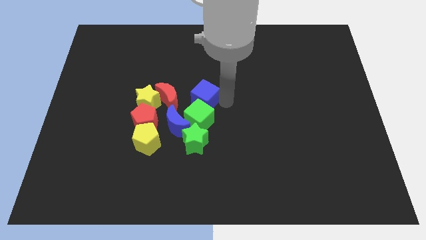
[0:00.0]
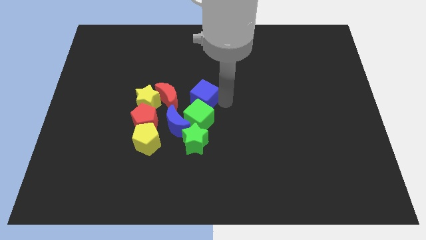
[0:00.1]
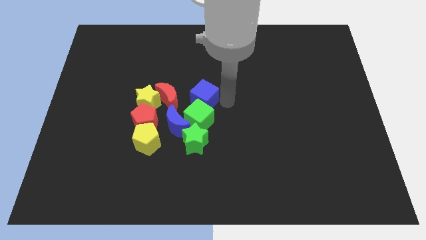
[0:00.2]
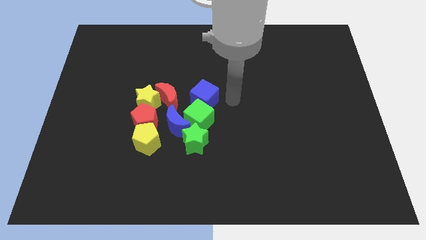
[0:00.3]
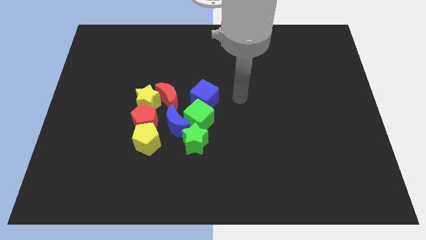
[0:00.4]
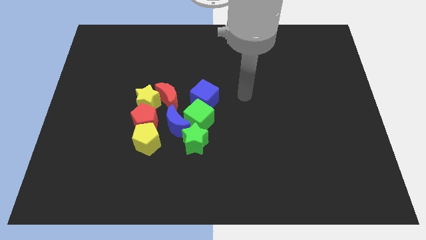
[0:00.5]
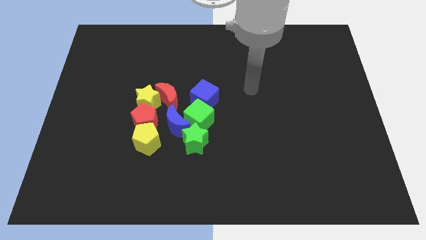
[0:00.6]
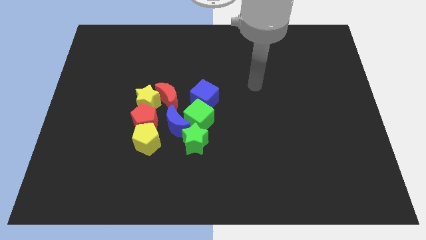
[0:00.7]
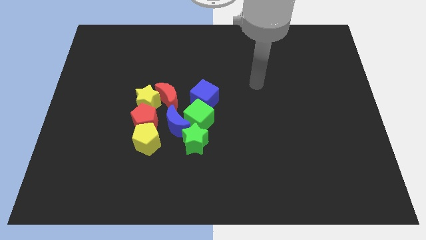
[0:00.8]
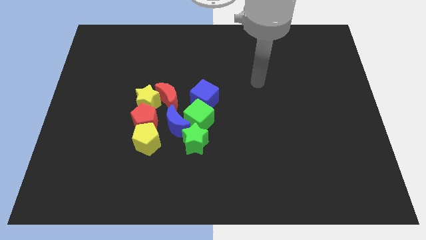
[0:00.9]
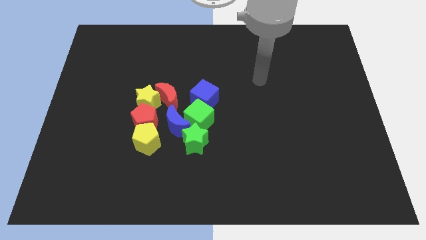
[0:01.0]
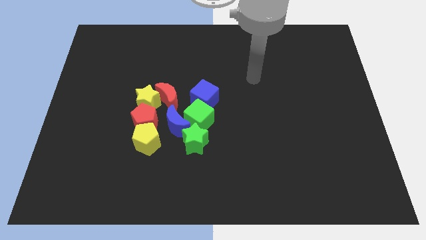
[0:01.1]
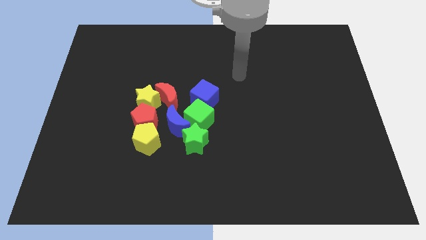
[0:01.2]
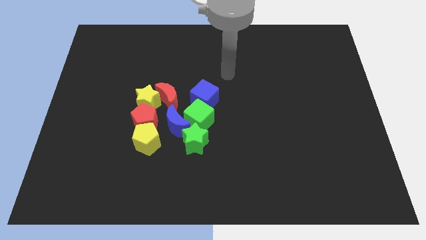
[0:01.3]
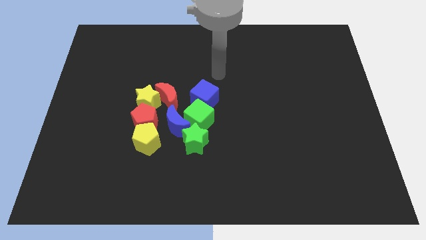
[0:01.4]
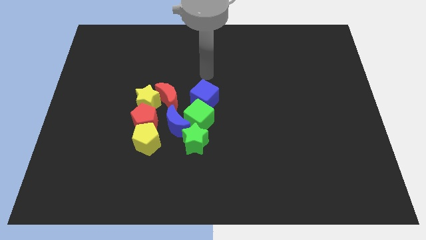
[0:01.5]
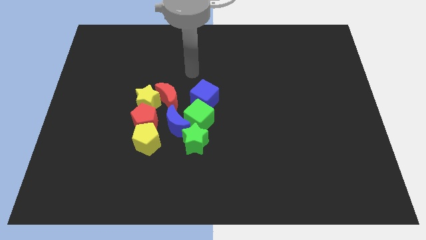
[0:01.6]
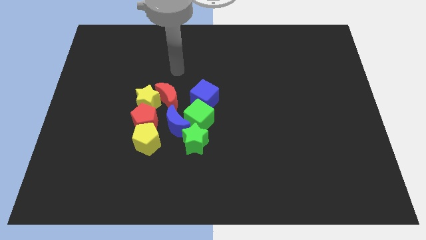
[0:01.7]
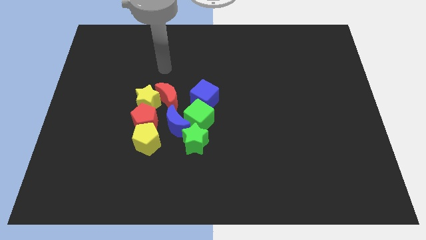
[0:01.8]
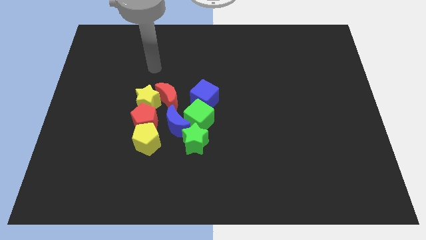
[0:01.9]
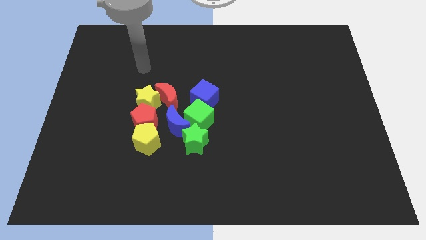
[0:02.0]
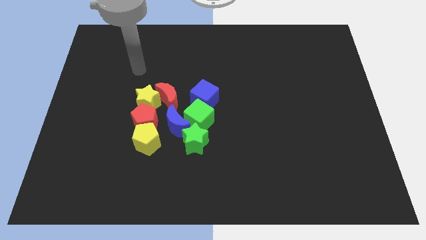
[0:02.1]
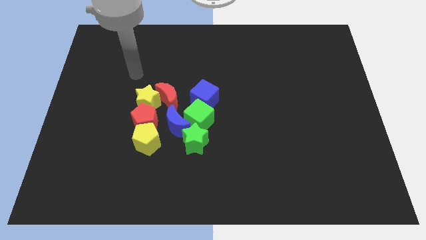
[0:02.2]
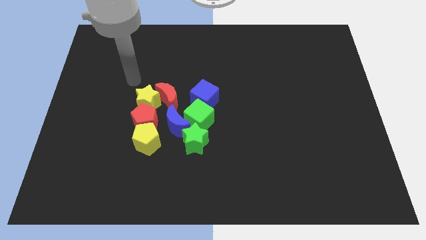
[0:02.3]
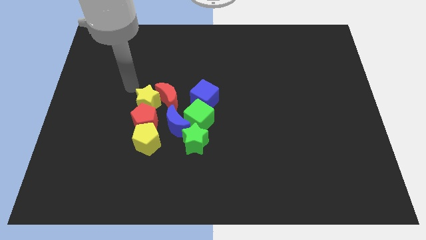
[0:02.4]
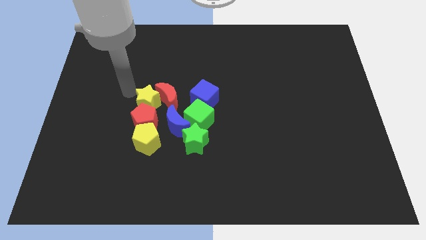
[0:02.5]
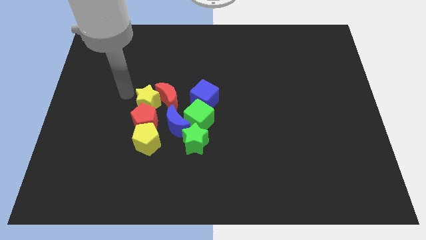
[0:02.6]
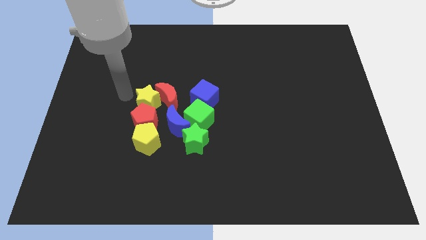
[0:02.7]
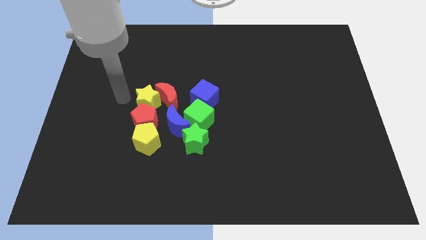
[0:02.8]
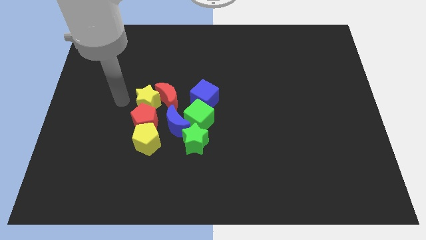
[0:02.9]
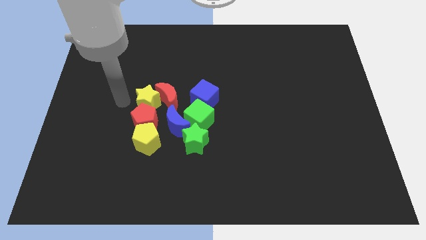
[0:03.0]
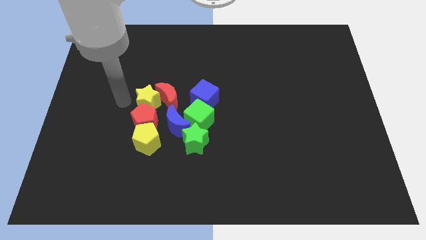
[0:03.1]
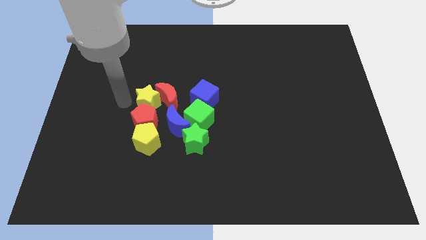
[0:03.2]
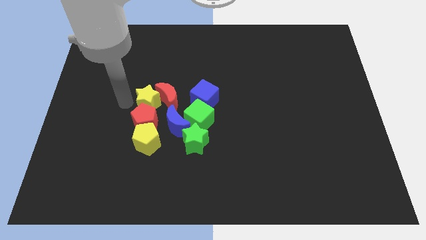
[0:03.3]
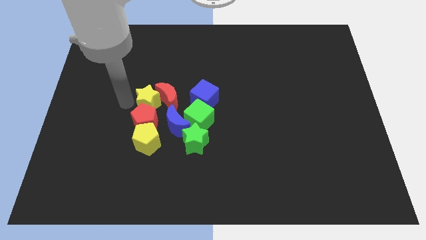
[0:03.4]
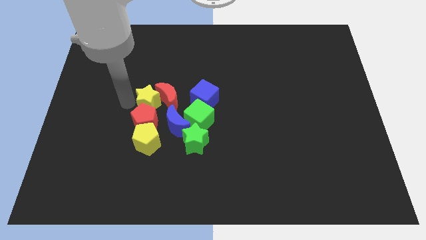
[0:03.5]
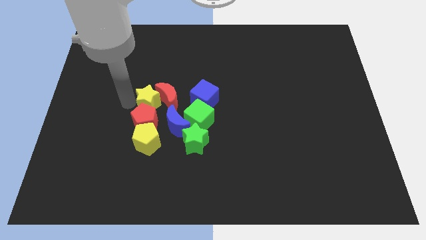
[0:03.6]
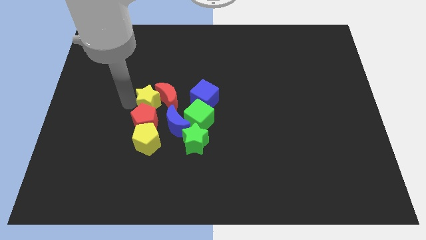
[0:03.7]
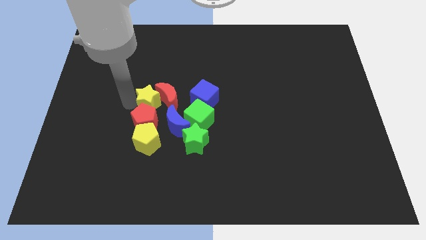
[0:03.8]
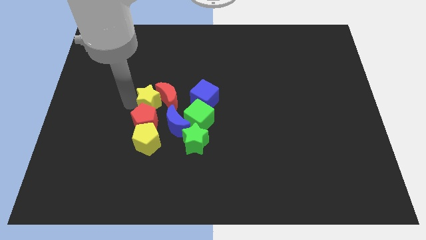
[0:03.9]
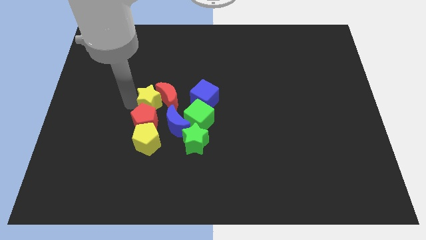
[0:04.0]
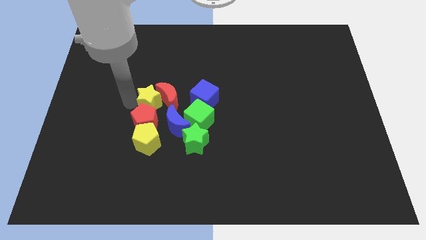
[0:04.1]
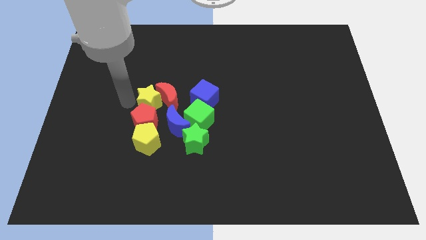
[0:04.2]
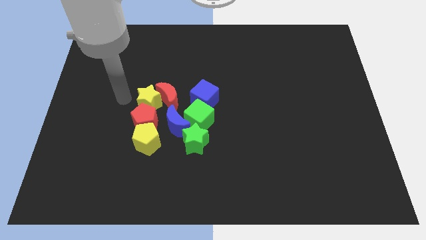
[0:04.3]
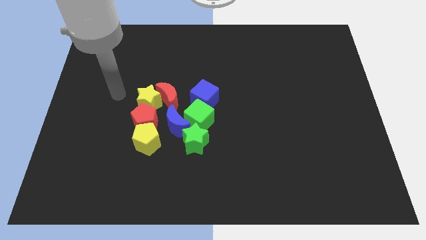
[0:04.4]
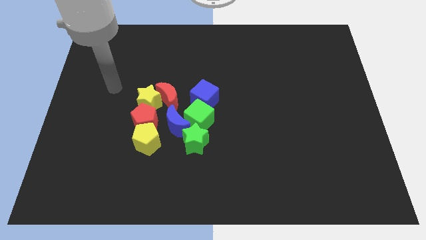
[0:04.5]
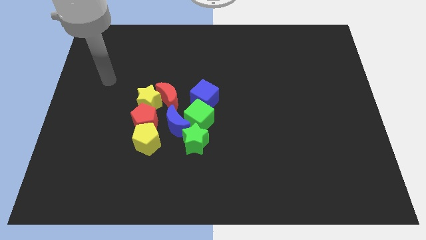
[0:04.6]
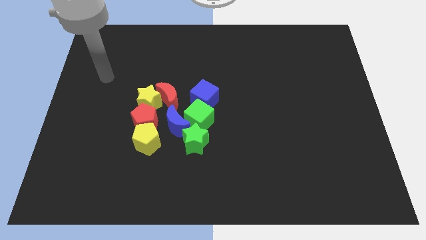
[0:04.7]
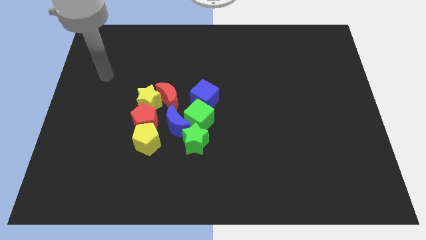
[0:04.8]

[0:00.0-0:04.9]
move the arm away from the blue cube

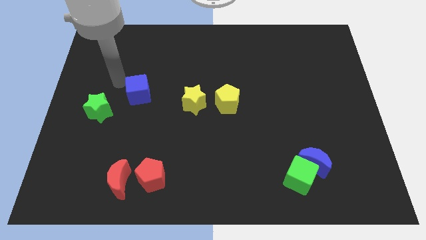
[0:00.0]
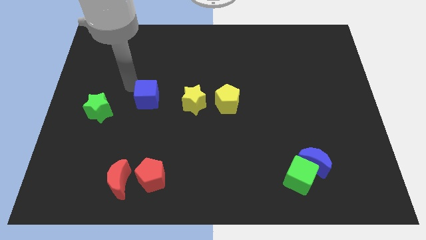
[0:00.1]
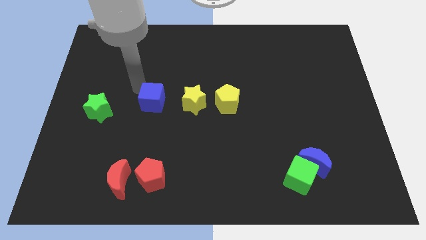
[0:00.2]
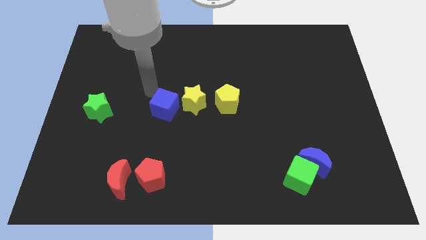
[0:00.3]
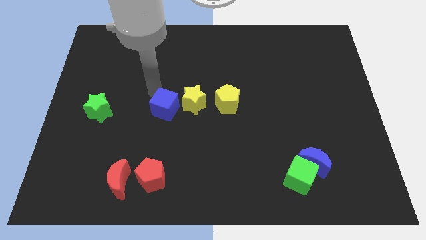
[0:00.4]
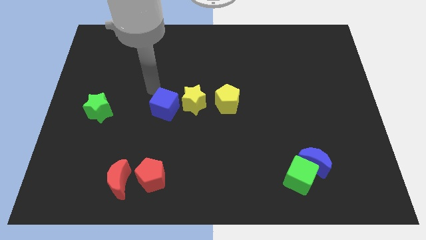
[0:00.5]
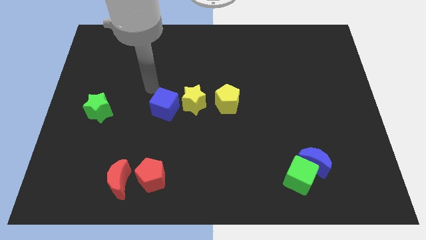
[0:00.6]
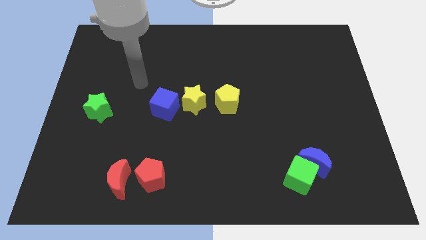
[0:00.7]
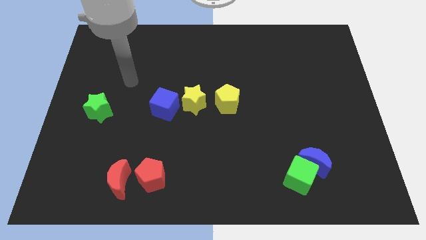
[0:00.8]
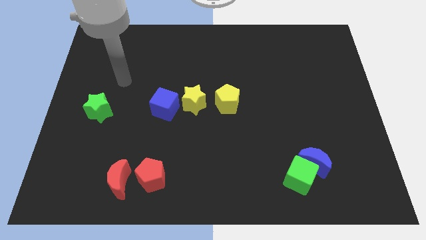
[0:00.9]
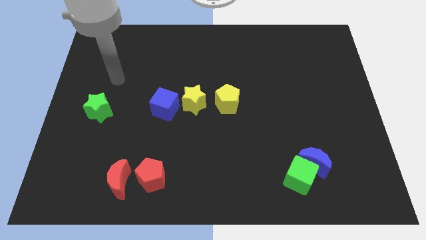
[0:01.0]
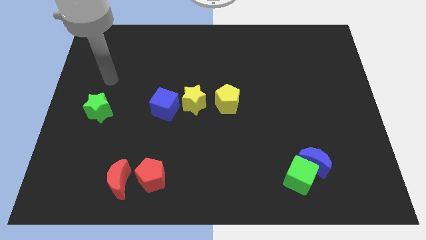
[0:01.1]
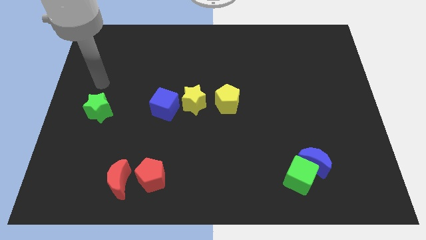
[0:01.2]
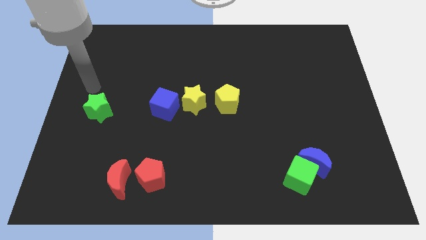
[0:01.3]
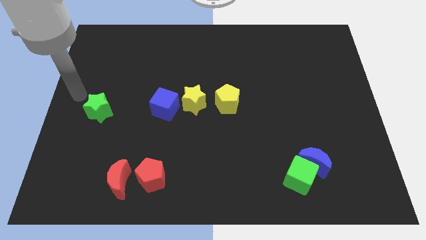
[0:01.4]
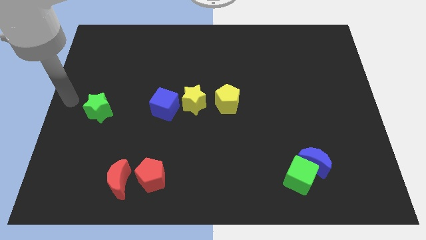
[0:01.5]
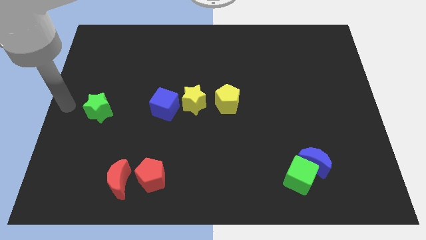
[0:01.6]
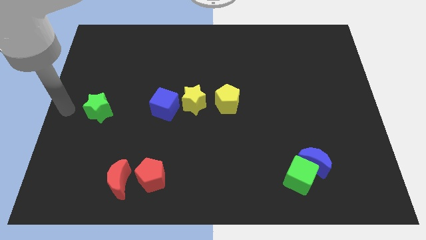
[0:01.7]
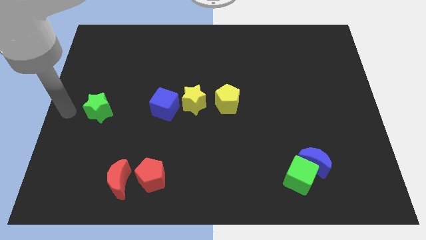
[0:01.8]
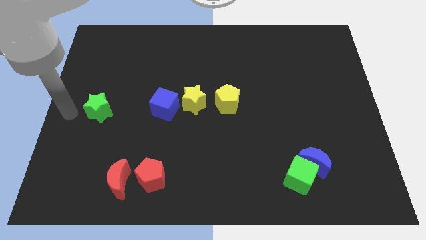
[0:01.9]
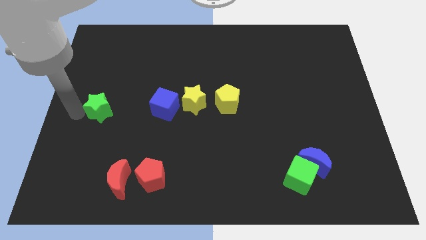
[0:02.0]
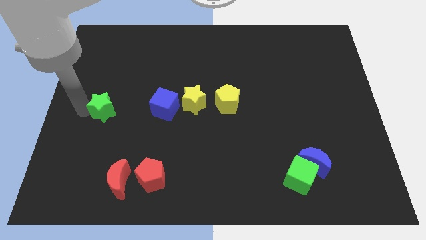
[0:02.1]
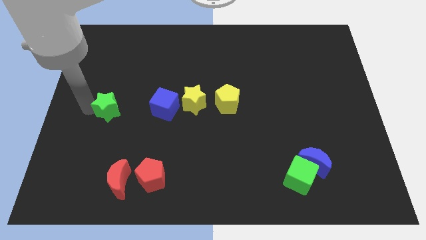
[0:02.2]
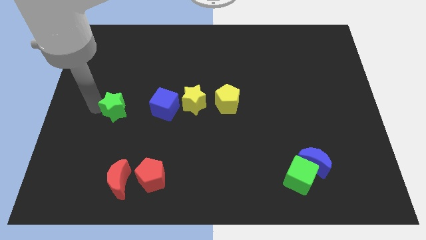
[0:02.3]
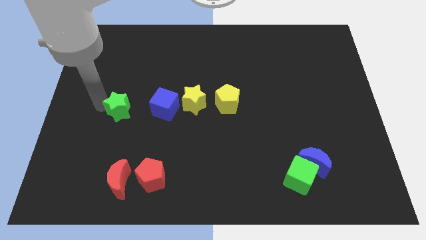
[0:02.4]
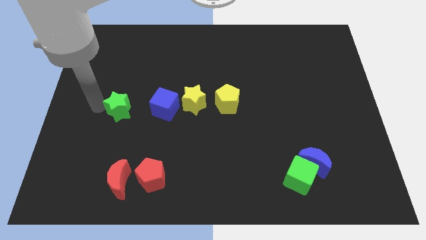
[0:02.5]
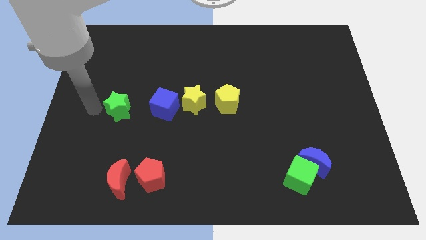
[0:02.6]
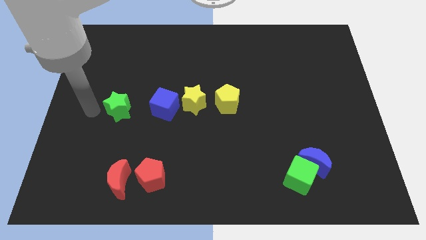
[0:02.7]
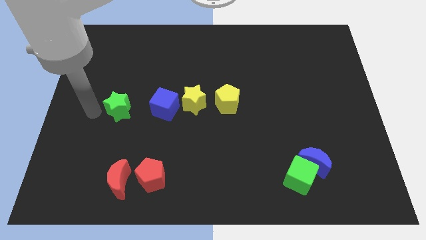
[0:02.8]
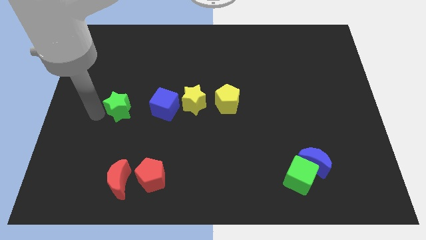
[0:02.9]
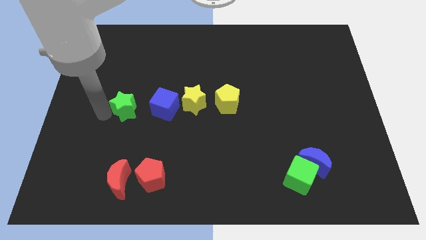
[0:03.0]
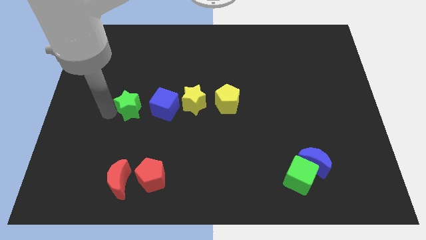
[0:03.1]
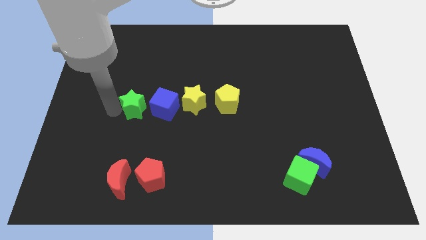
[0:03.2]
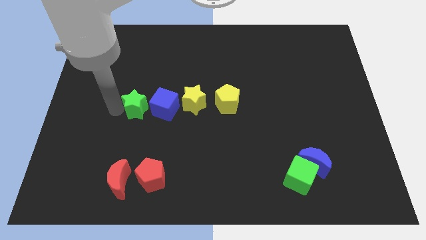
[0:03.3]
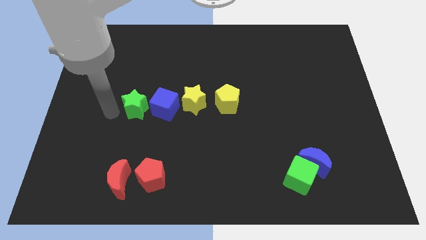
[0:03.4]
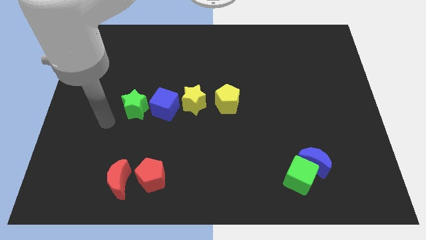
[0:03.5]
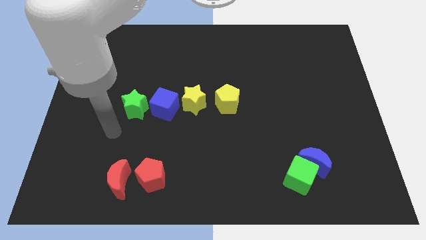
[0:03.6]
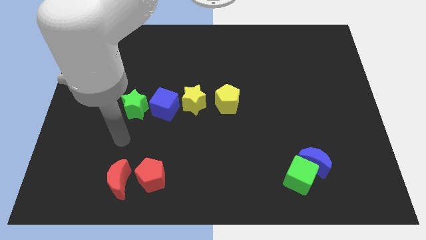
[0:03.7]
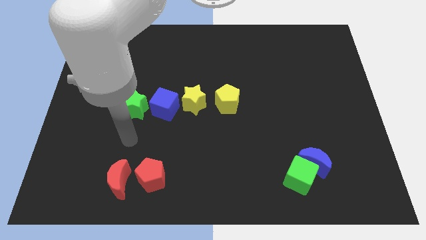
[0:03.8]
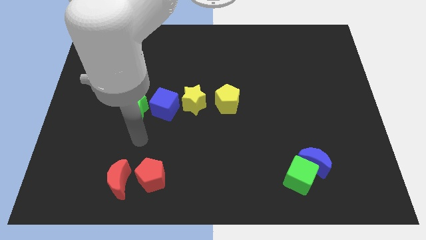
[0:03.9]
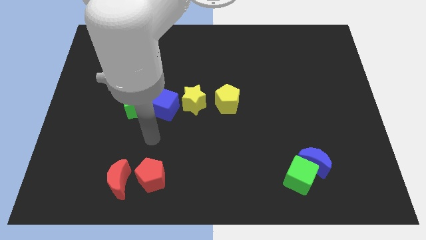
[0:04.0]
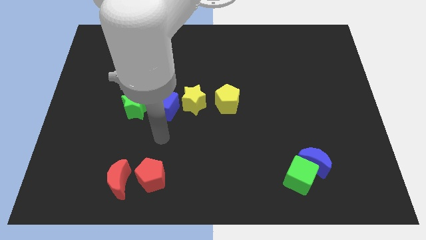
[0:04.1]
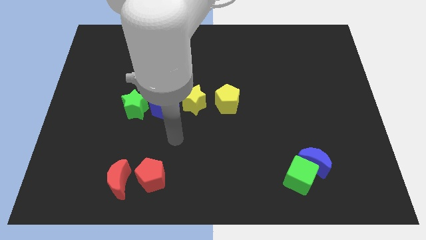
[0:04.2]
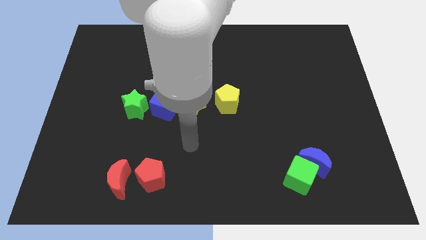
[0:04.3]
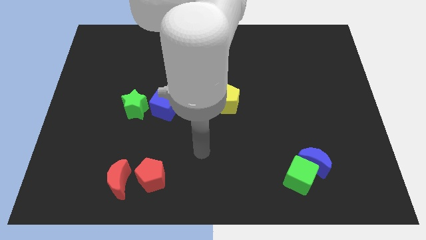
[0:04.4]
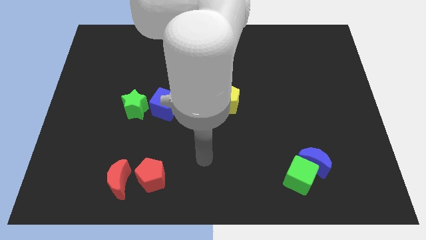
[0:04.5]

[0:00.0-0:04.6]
move the green star left to the blue cube
